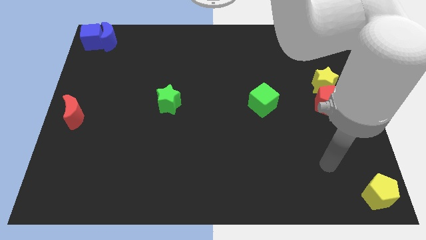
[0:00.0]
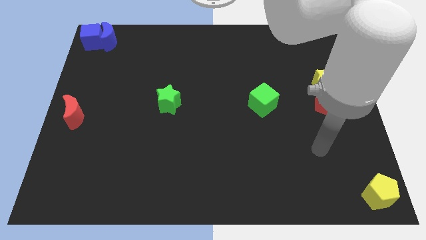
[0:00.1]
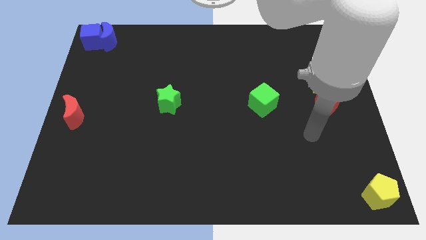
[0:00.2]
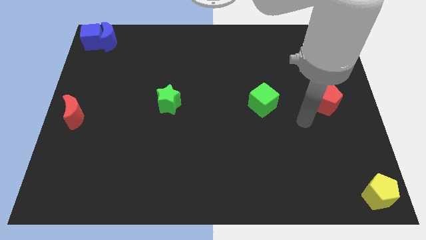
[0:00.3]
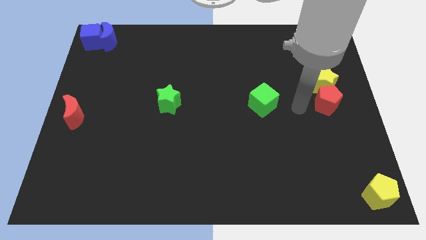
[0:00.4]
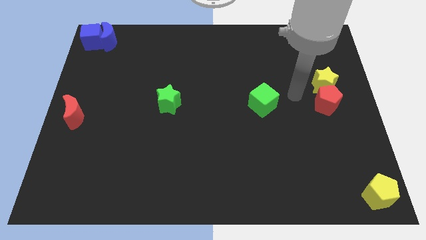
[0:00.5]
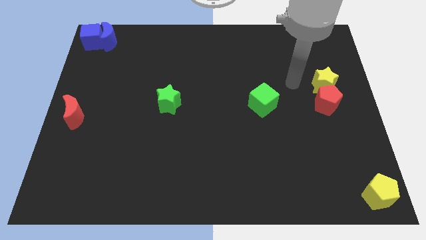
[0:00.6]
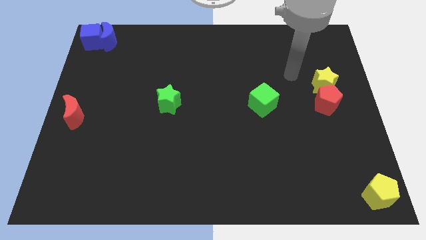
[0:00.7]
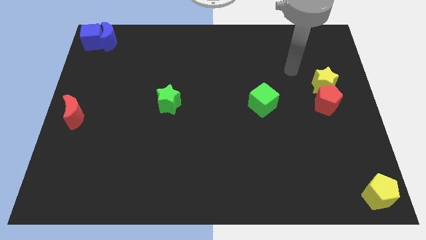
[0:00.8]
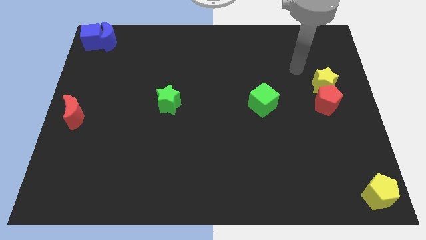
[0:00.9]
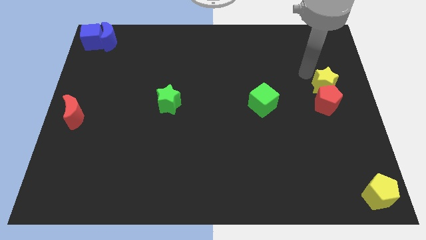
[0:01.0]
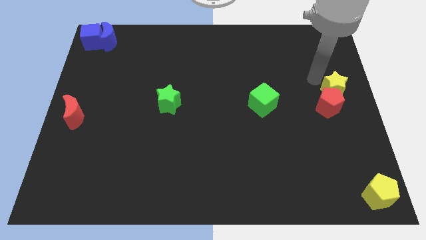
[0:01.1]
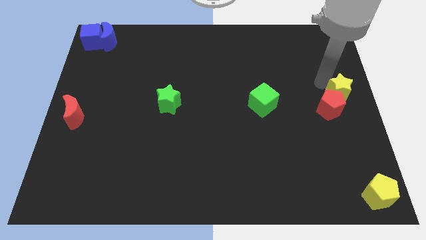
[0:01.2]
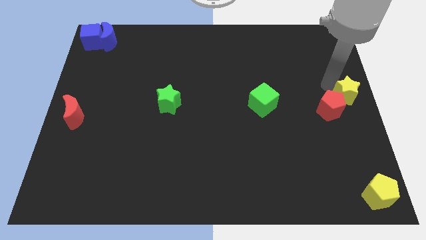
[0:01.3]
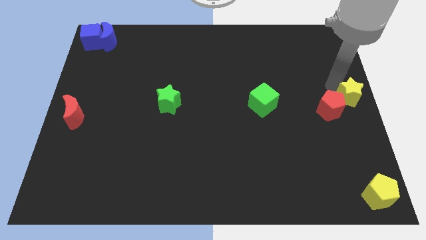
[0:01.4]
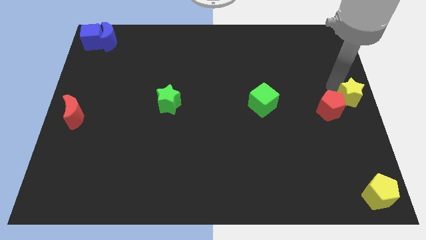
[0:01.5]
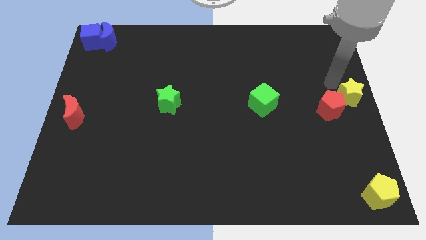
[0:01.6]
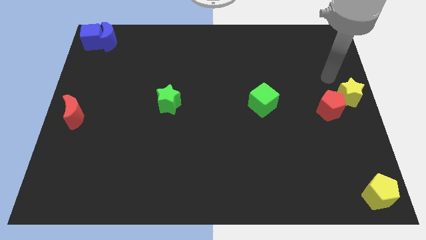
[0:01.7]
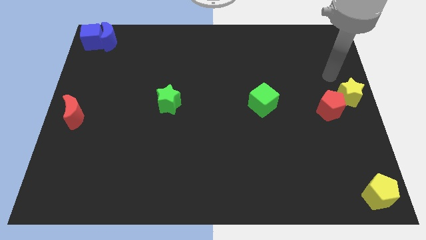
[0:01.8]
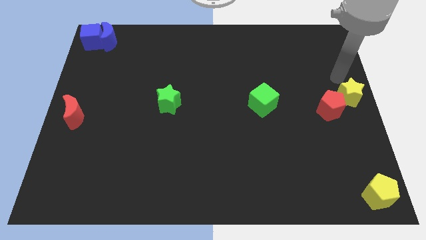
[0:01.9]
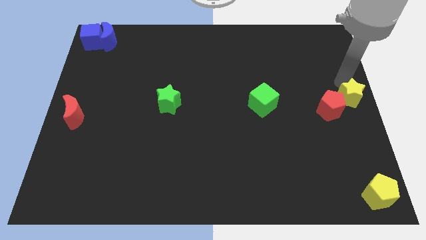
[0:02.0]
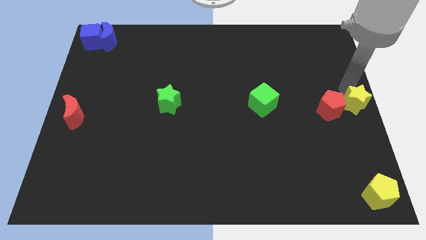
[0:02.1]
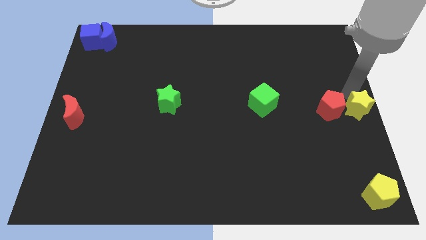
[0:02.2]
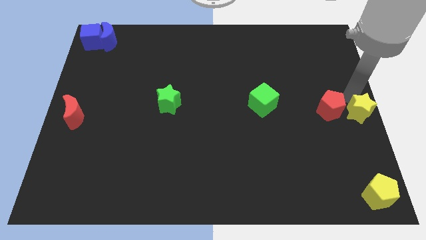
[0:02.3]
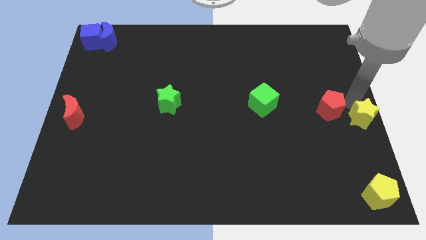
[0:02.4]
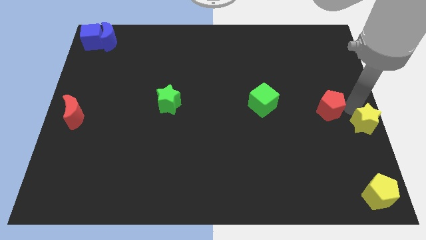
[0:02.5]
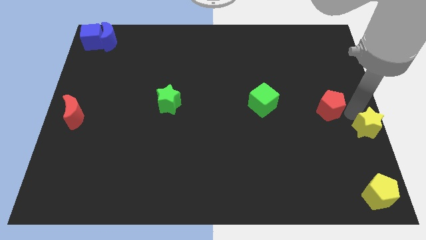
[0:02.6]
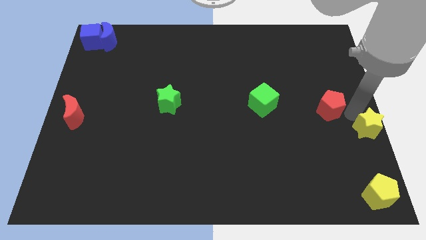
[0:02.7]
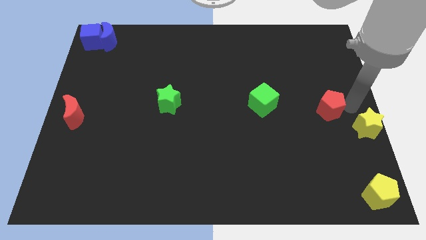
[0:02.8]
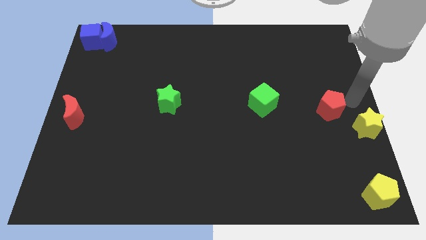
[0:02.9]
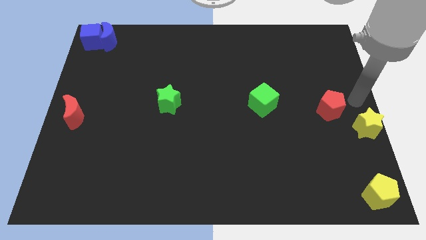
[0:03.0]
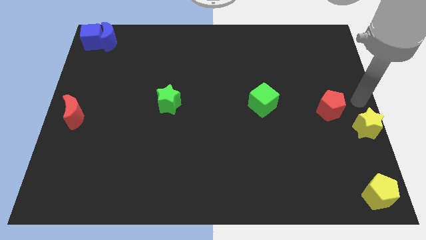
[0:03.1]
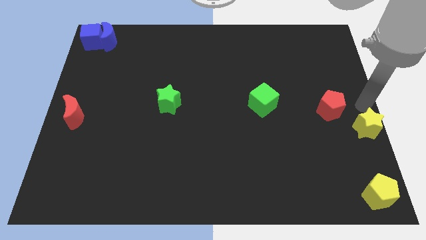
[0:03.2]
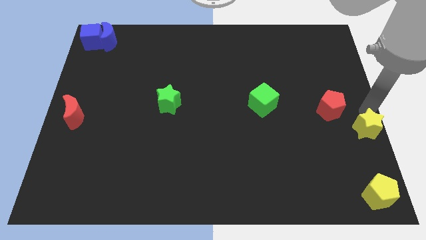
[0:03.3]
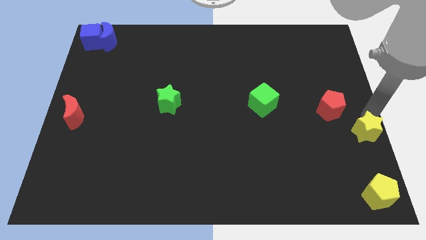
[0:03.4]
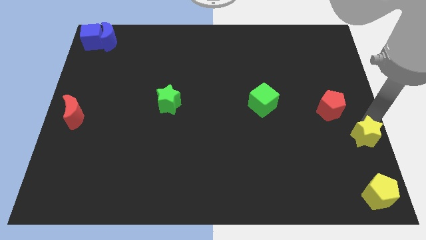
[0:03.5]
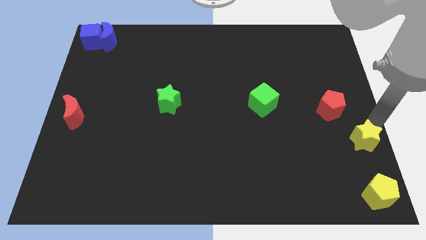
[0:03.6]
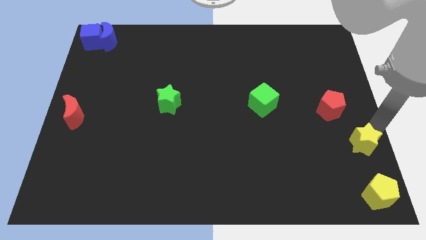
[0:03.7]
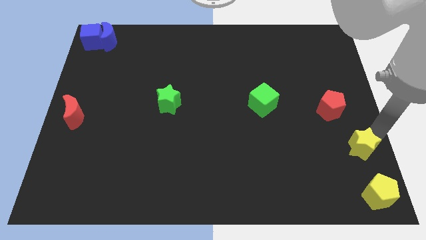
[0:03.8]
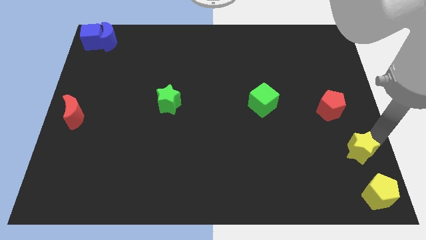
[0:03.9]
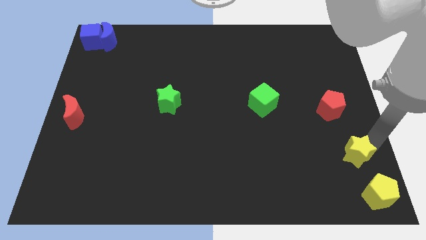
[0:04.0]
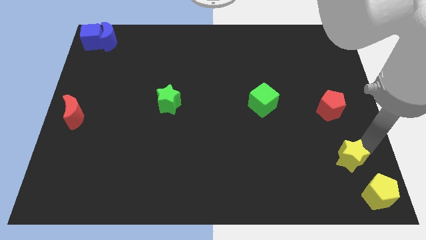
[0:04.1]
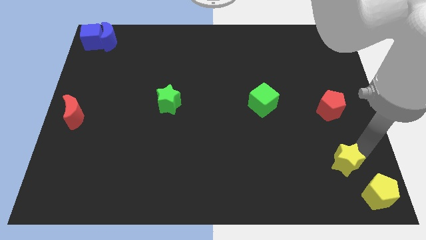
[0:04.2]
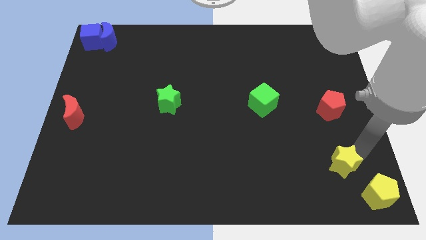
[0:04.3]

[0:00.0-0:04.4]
place the yellow star diagonally above the yellow pentagon

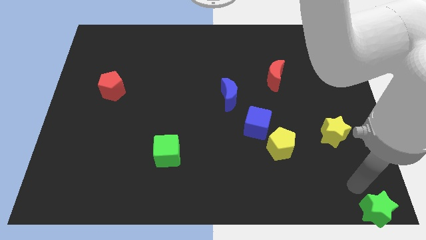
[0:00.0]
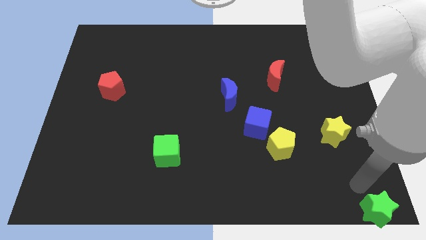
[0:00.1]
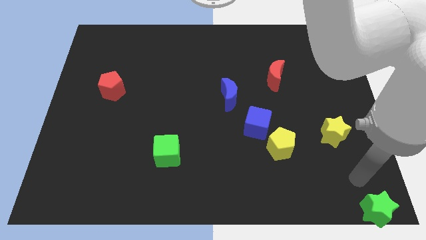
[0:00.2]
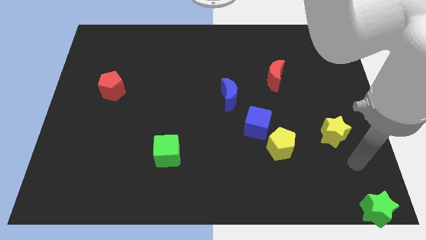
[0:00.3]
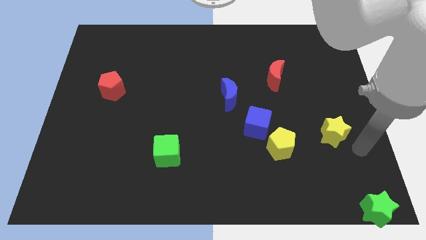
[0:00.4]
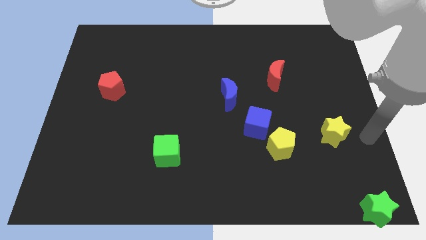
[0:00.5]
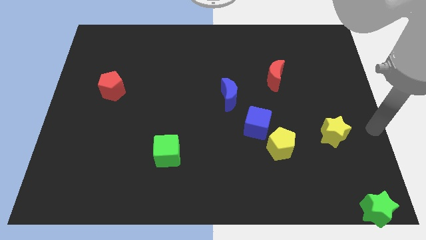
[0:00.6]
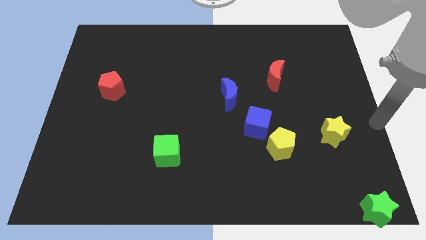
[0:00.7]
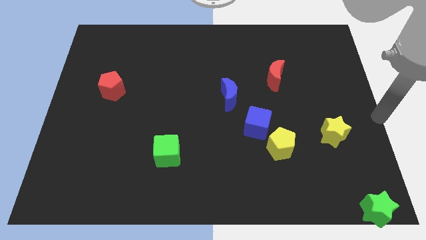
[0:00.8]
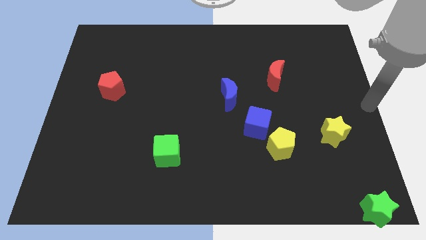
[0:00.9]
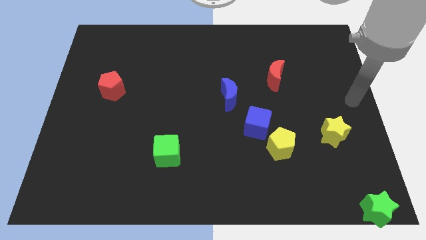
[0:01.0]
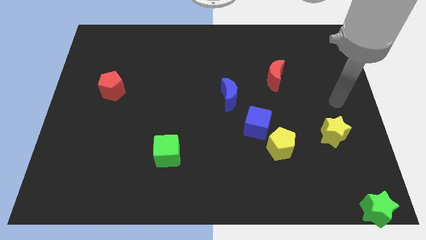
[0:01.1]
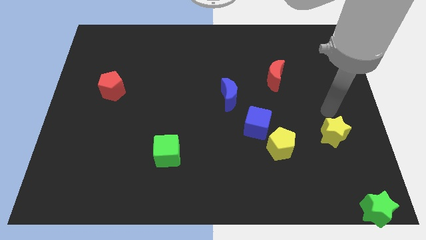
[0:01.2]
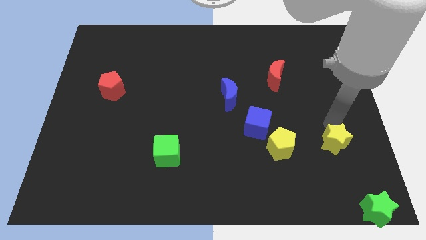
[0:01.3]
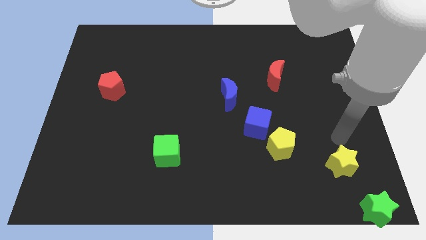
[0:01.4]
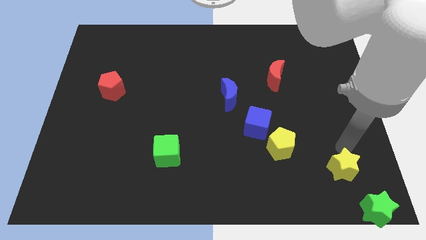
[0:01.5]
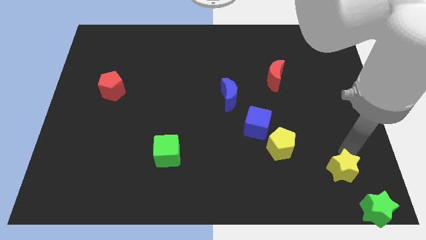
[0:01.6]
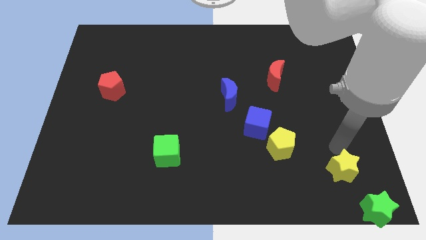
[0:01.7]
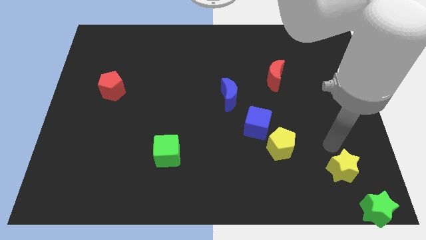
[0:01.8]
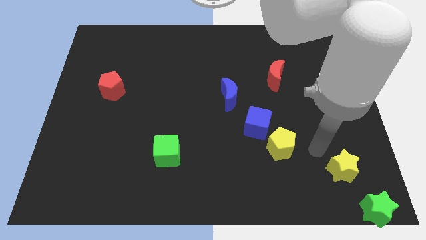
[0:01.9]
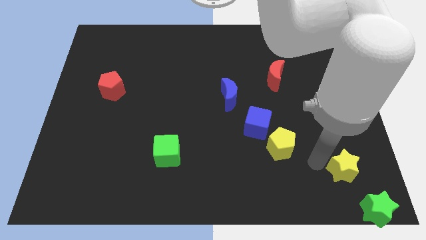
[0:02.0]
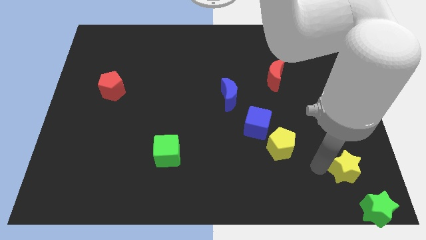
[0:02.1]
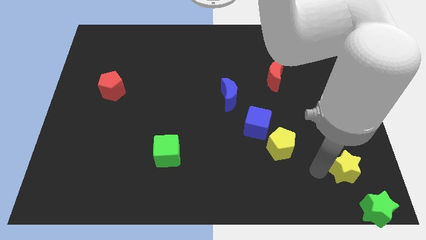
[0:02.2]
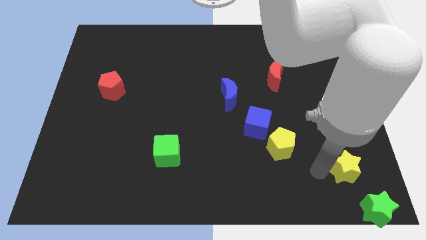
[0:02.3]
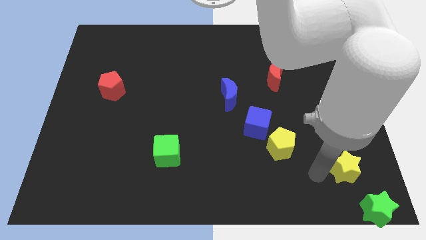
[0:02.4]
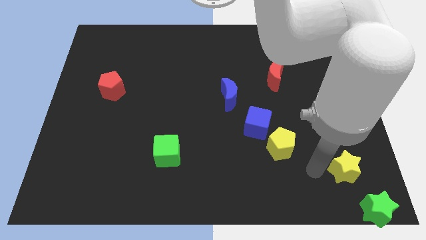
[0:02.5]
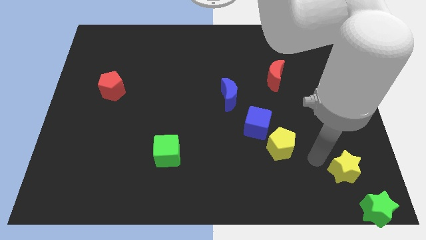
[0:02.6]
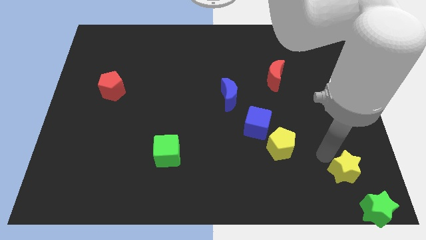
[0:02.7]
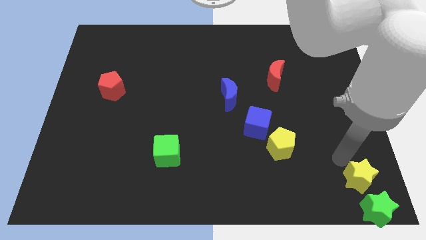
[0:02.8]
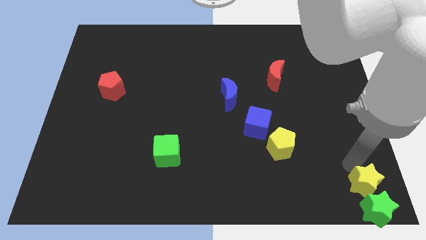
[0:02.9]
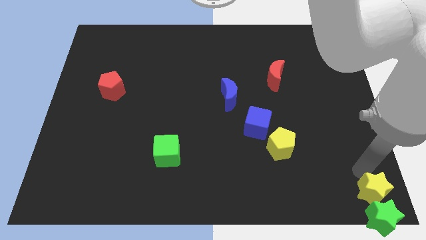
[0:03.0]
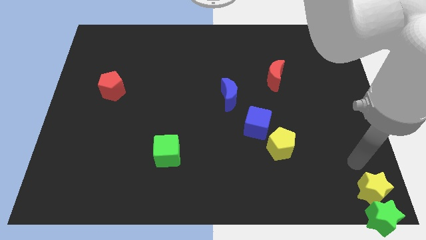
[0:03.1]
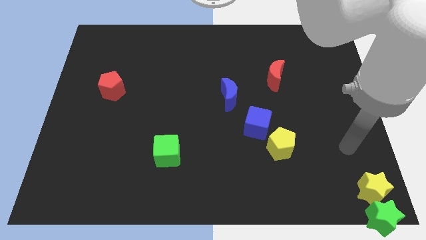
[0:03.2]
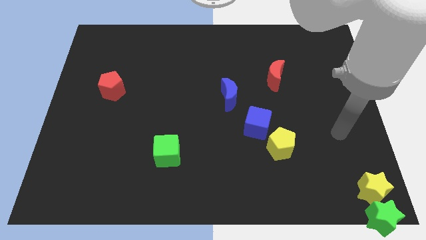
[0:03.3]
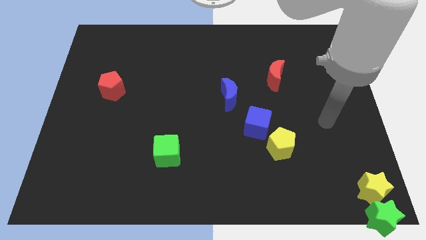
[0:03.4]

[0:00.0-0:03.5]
place the yellow star on top into green star

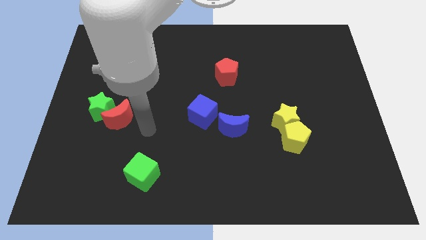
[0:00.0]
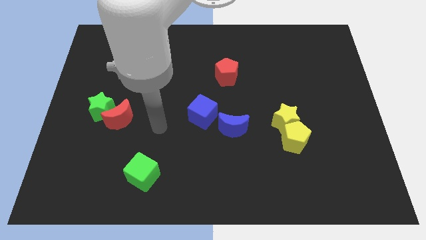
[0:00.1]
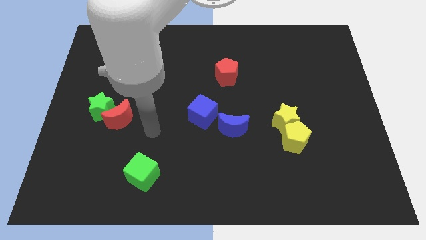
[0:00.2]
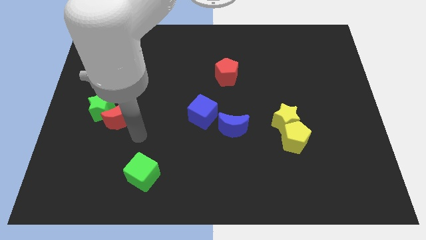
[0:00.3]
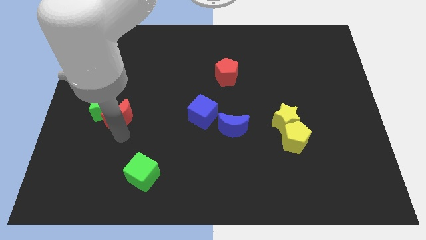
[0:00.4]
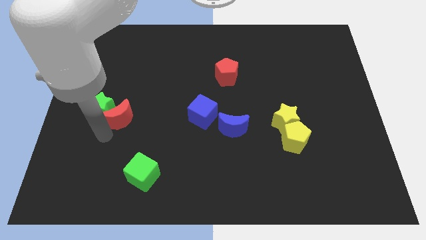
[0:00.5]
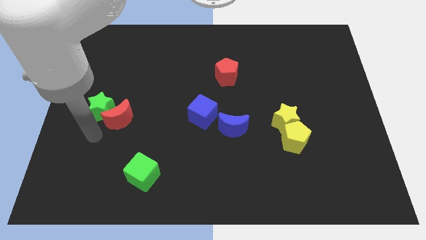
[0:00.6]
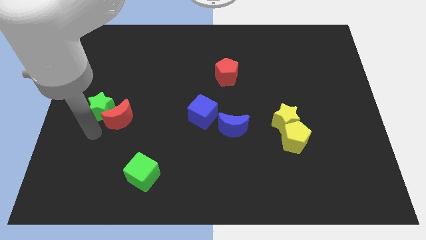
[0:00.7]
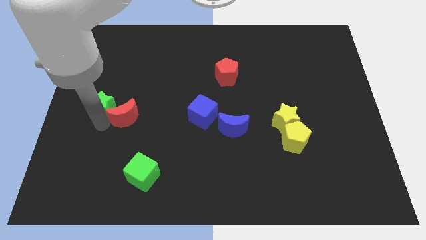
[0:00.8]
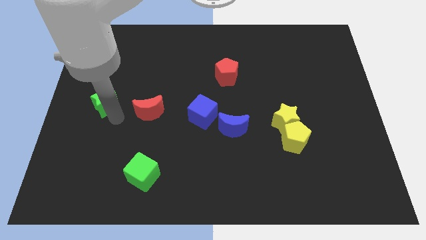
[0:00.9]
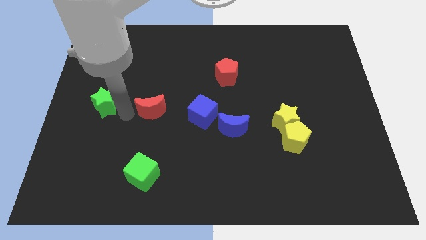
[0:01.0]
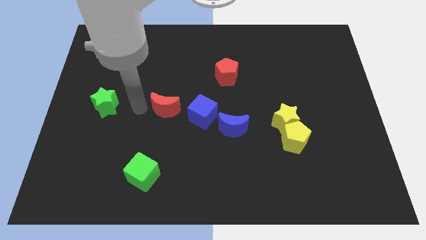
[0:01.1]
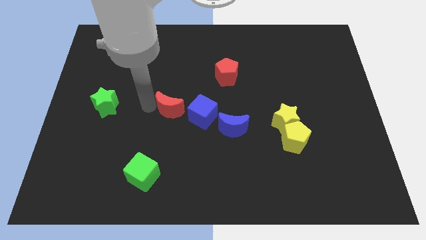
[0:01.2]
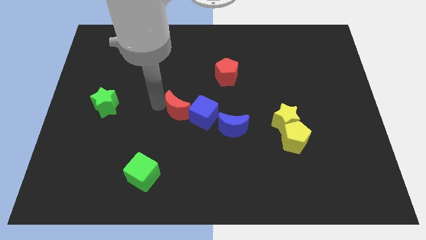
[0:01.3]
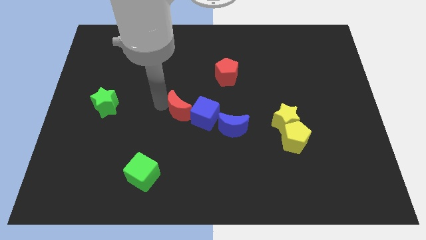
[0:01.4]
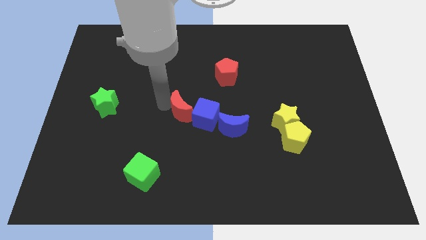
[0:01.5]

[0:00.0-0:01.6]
move the red crescent towards blue cube
